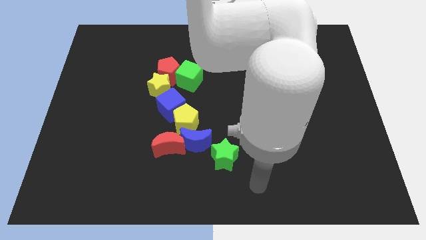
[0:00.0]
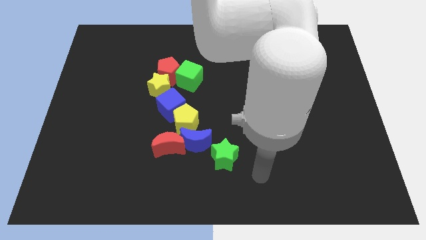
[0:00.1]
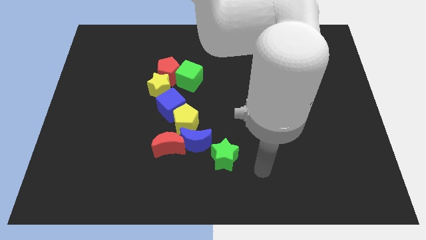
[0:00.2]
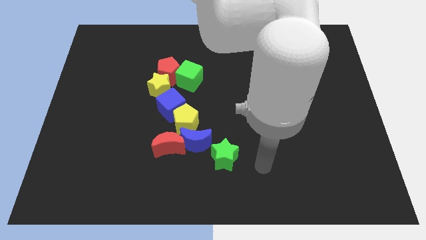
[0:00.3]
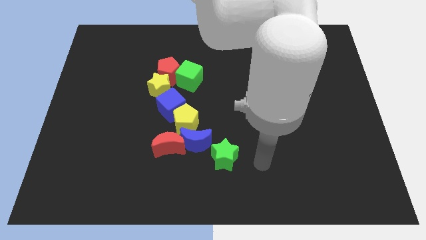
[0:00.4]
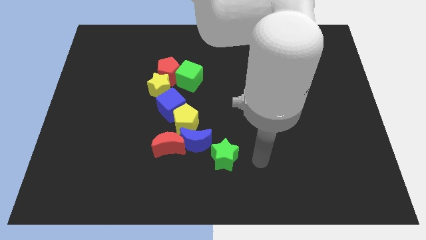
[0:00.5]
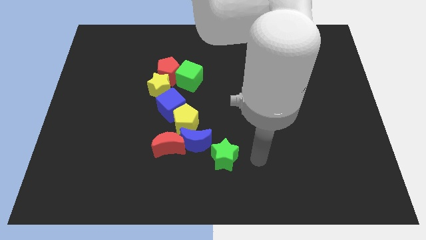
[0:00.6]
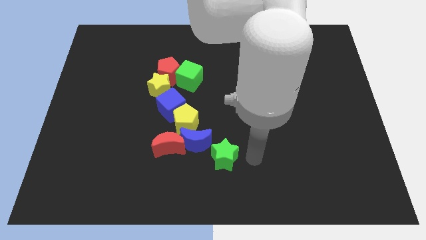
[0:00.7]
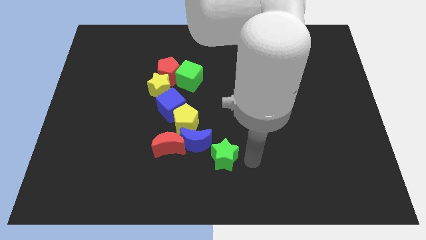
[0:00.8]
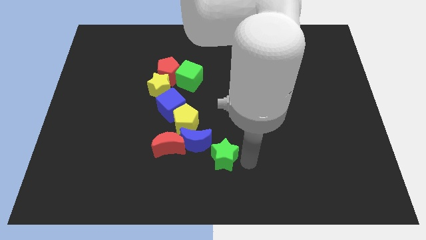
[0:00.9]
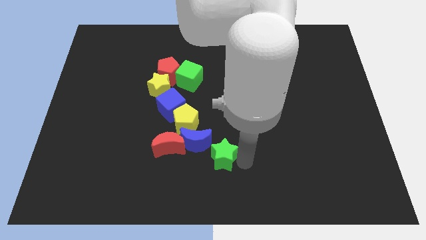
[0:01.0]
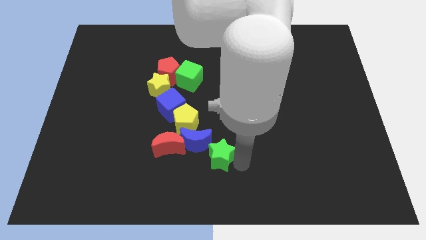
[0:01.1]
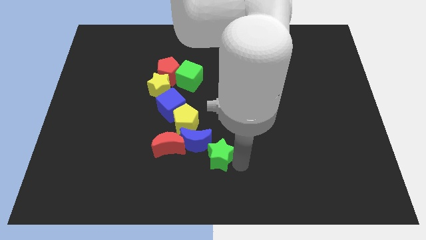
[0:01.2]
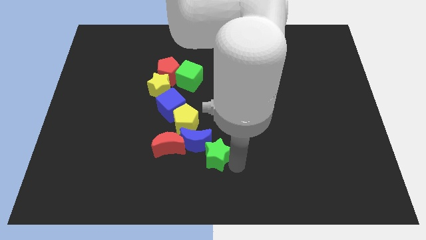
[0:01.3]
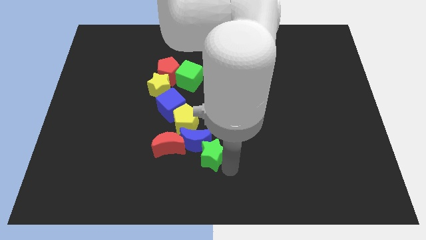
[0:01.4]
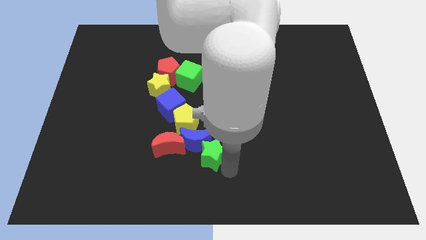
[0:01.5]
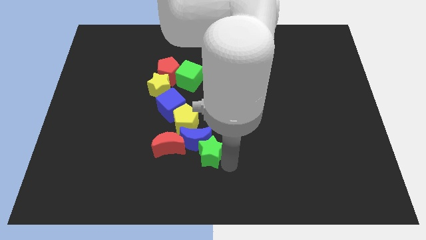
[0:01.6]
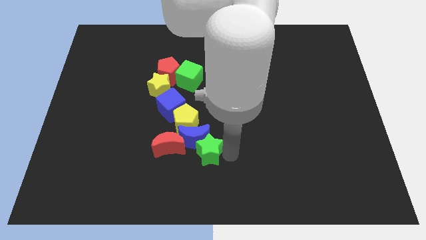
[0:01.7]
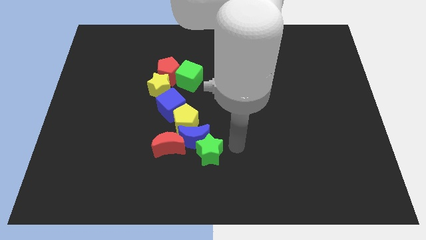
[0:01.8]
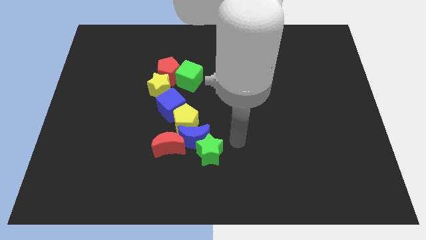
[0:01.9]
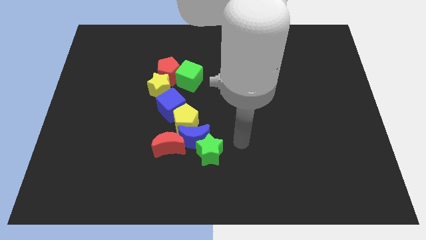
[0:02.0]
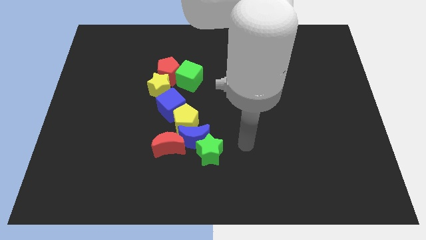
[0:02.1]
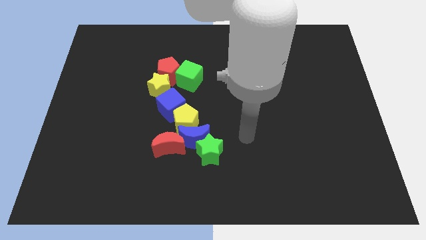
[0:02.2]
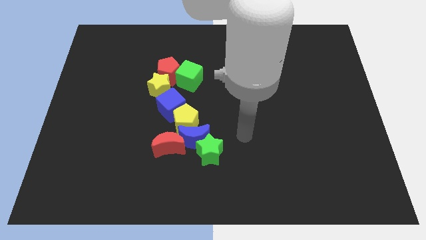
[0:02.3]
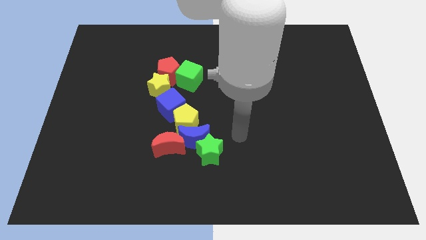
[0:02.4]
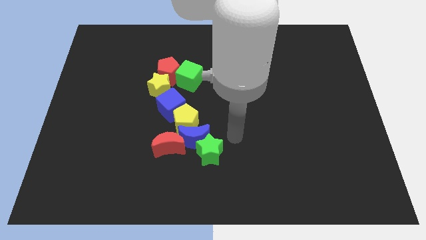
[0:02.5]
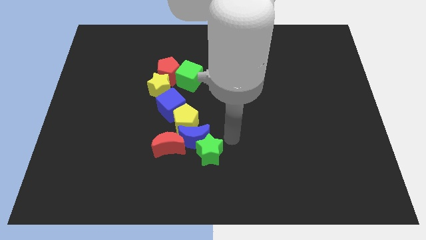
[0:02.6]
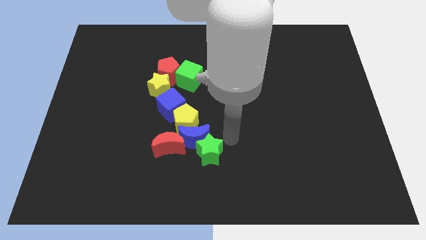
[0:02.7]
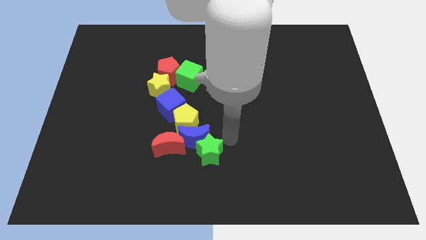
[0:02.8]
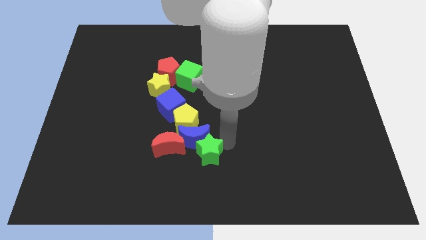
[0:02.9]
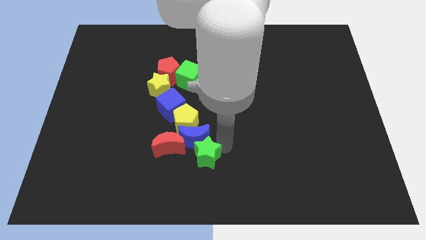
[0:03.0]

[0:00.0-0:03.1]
place green star below blue moon

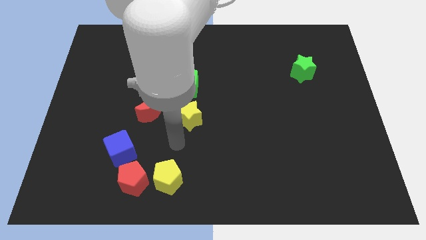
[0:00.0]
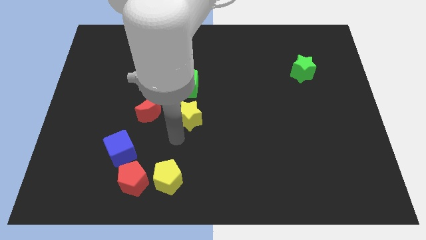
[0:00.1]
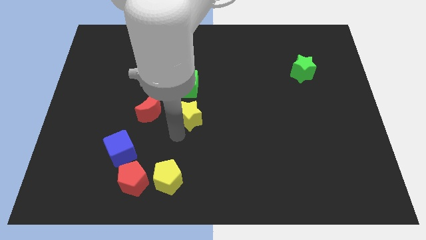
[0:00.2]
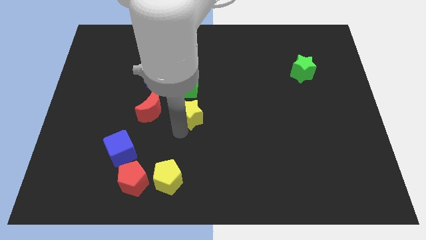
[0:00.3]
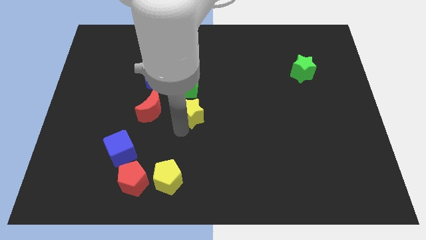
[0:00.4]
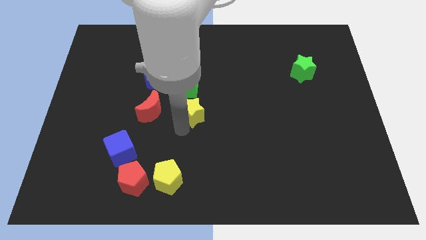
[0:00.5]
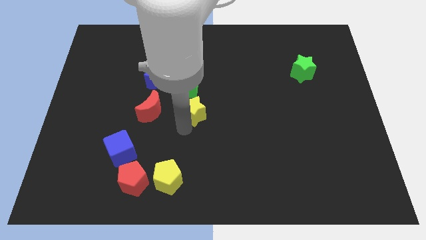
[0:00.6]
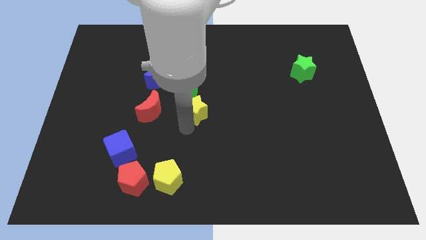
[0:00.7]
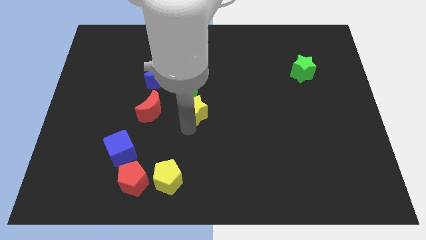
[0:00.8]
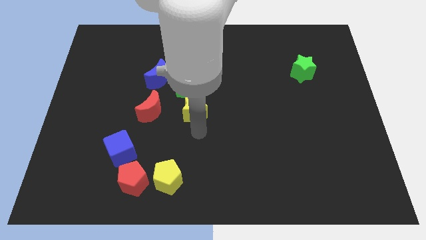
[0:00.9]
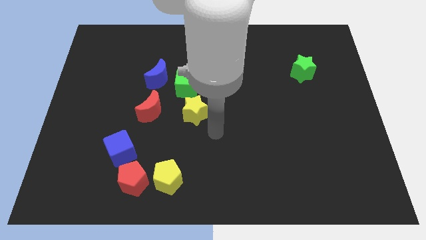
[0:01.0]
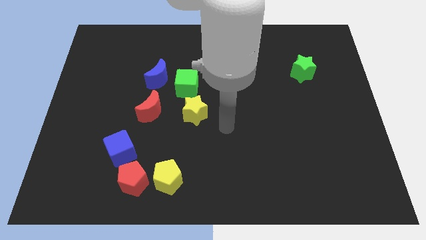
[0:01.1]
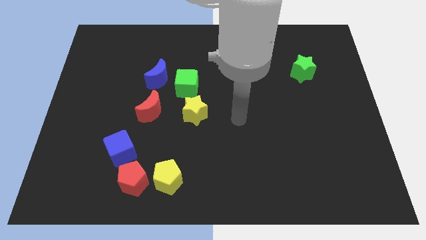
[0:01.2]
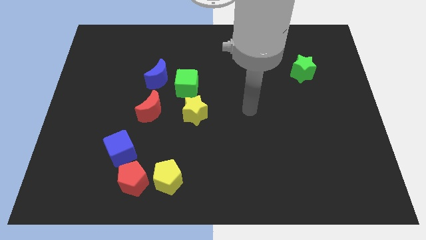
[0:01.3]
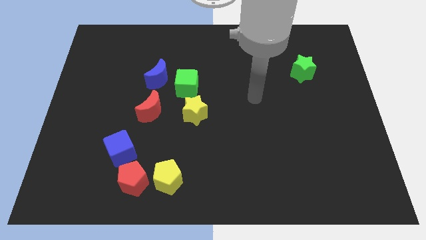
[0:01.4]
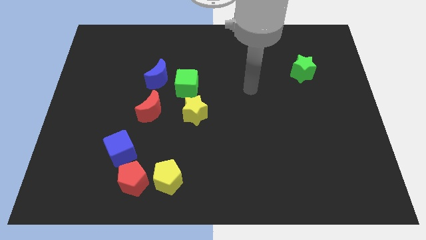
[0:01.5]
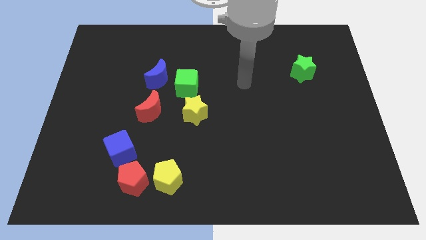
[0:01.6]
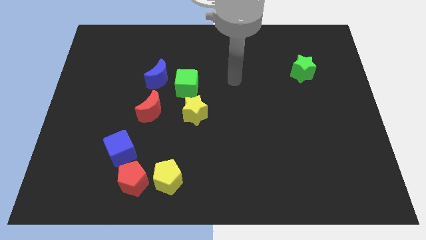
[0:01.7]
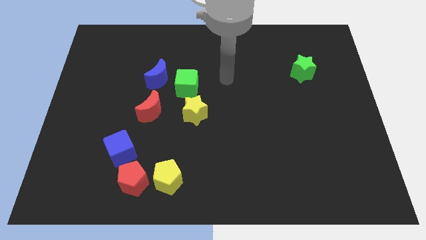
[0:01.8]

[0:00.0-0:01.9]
push yellow star a bit close to the green cube

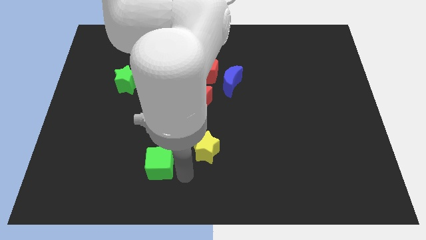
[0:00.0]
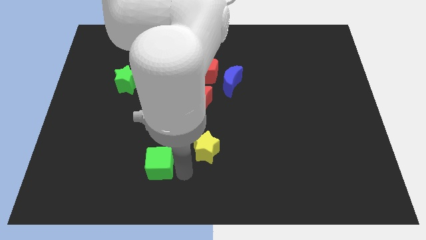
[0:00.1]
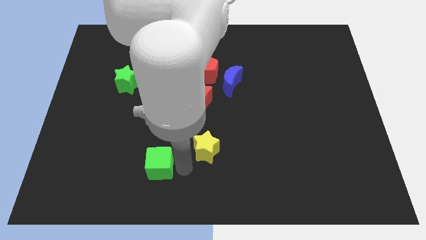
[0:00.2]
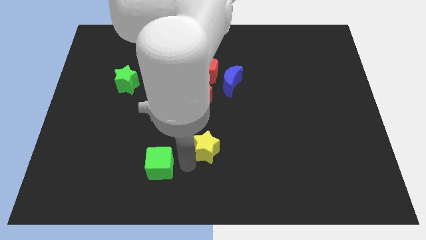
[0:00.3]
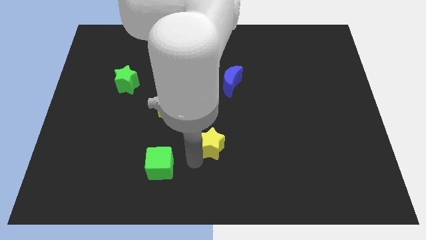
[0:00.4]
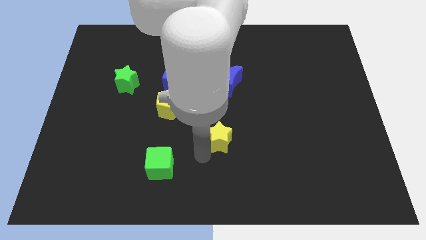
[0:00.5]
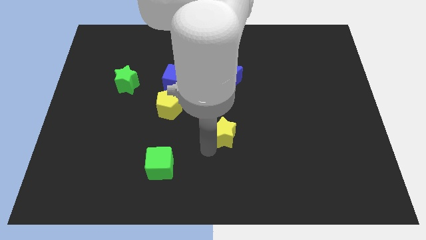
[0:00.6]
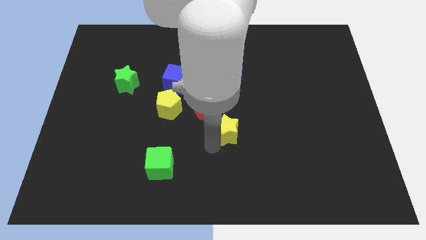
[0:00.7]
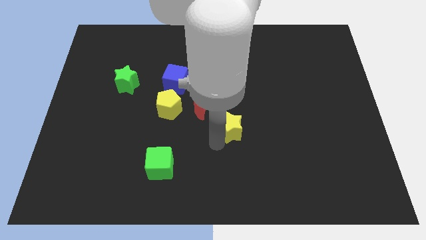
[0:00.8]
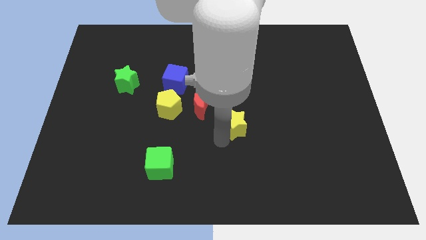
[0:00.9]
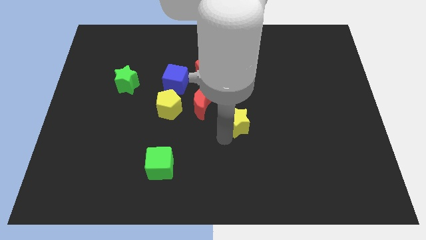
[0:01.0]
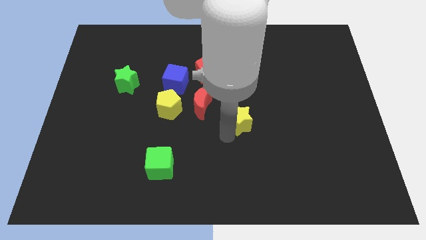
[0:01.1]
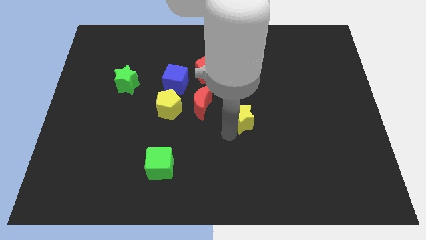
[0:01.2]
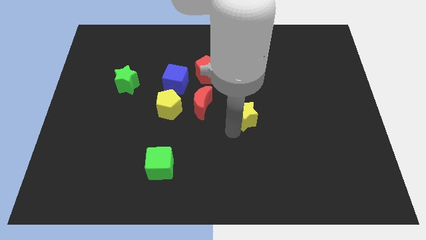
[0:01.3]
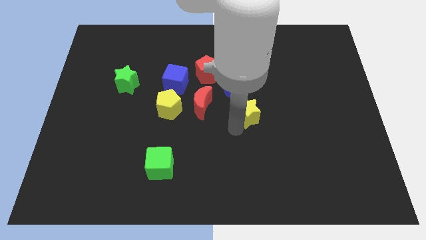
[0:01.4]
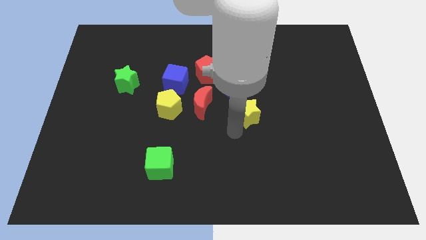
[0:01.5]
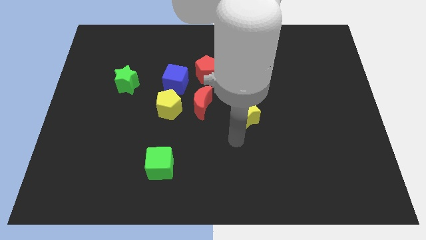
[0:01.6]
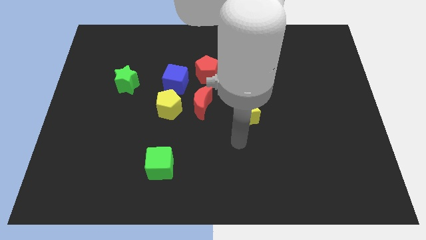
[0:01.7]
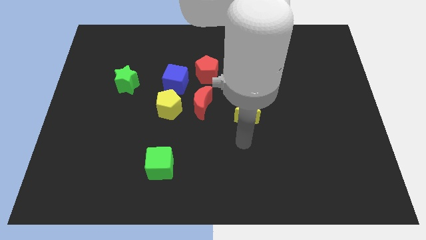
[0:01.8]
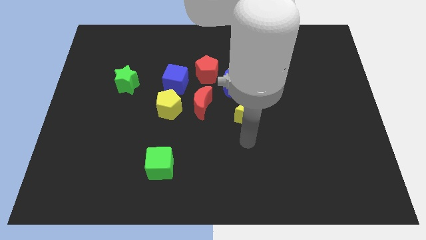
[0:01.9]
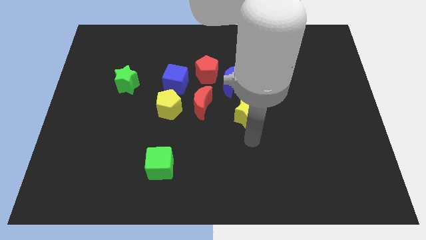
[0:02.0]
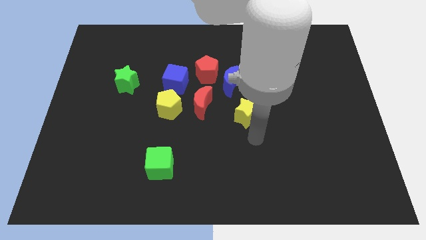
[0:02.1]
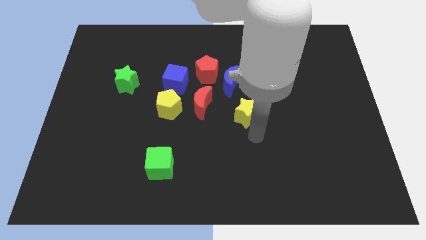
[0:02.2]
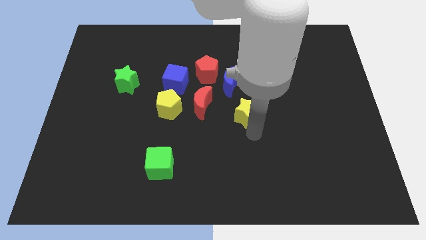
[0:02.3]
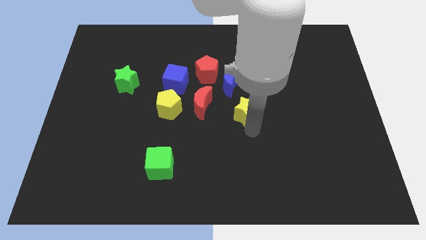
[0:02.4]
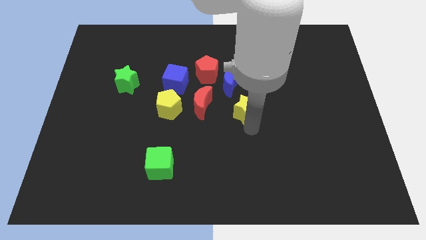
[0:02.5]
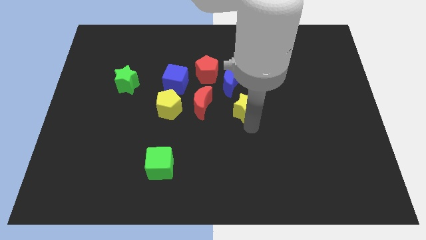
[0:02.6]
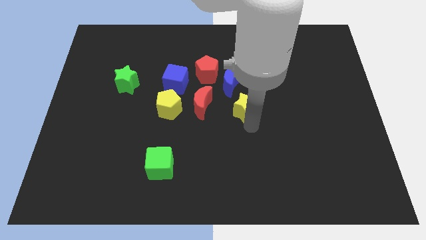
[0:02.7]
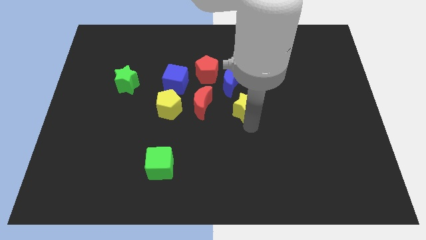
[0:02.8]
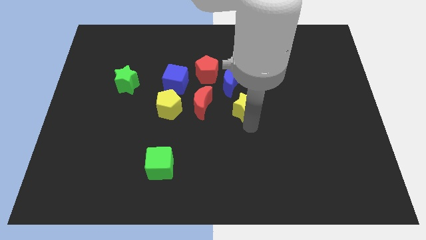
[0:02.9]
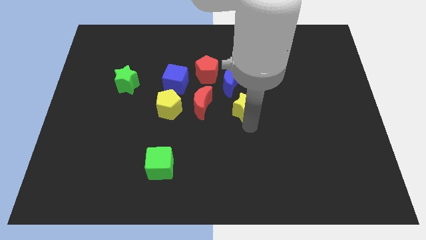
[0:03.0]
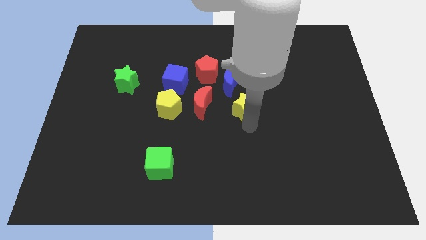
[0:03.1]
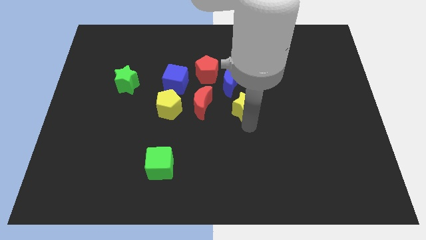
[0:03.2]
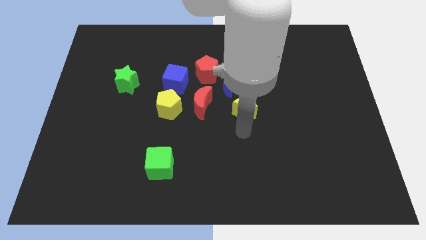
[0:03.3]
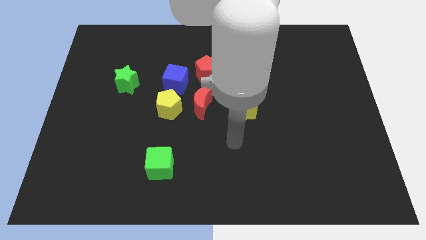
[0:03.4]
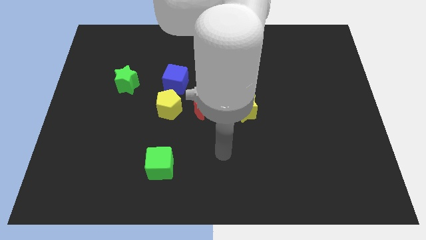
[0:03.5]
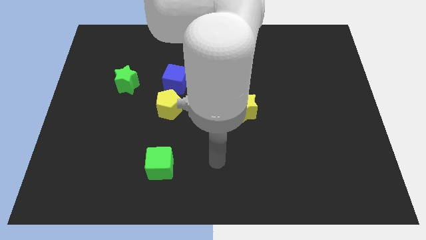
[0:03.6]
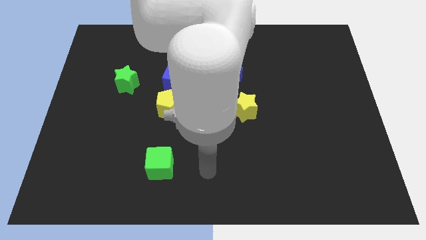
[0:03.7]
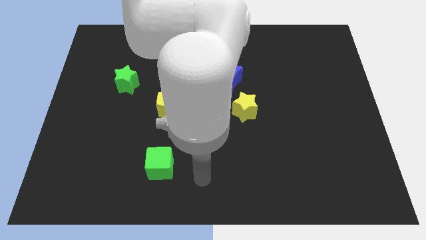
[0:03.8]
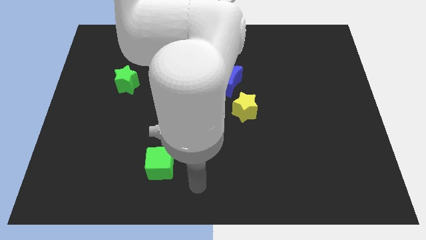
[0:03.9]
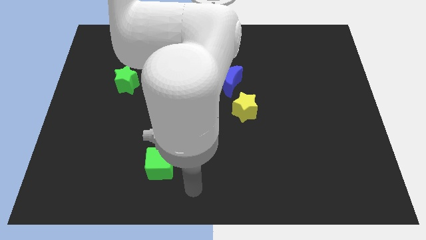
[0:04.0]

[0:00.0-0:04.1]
place the yellow star towards the right of the red crescent
